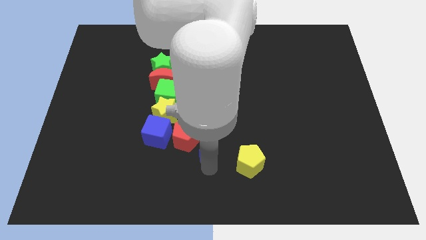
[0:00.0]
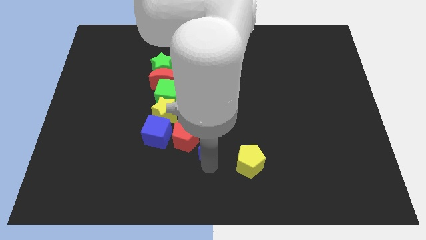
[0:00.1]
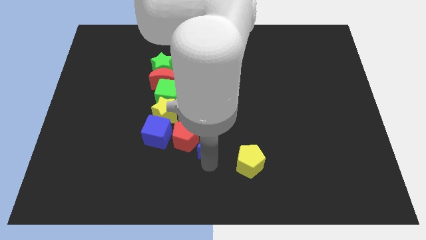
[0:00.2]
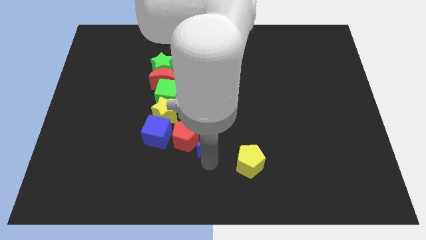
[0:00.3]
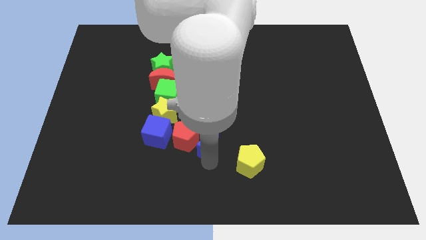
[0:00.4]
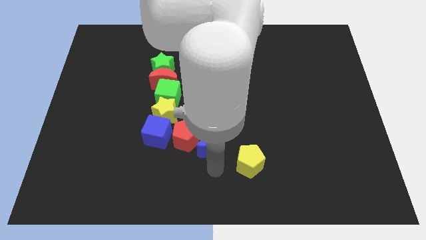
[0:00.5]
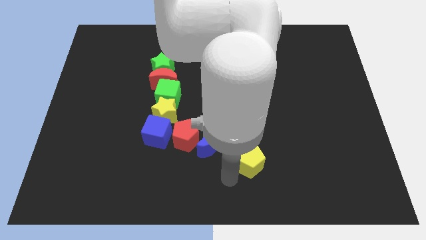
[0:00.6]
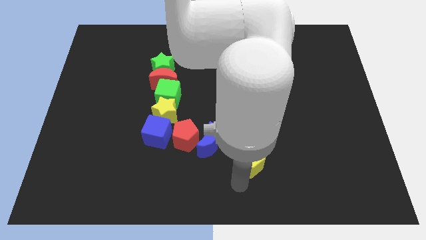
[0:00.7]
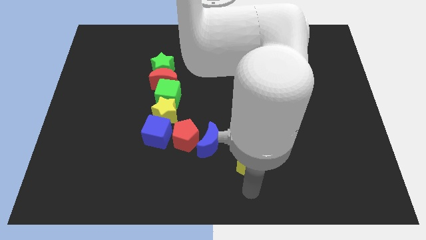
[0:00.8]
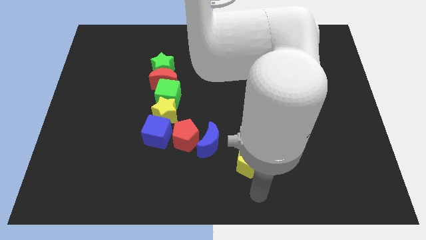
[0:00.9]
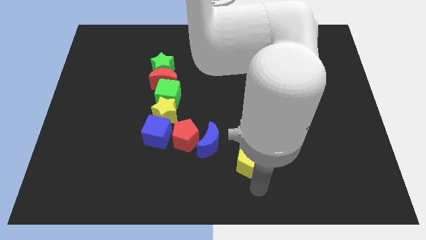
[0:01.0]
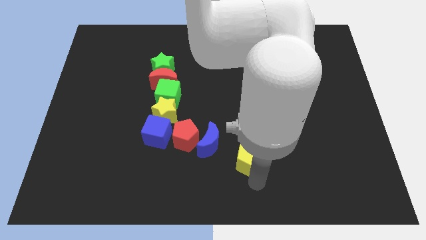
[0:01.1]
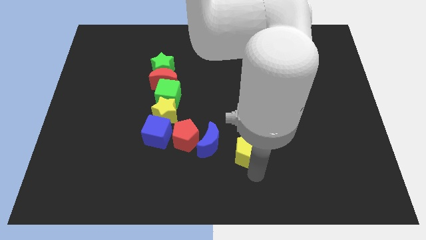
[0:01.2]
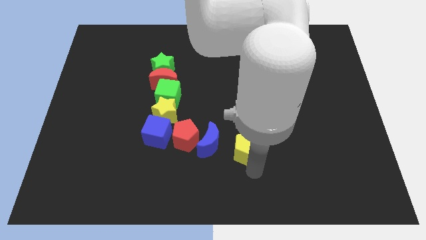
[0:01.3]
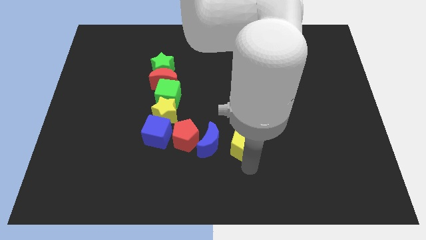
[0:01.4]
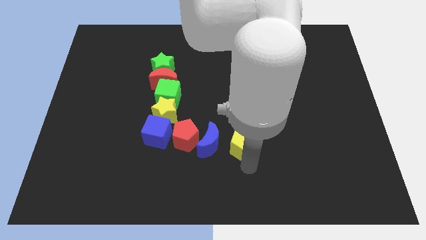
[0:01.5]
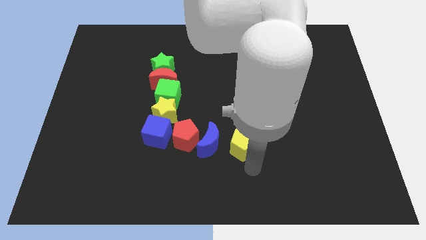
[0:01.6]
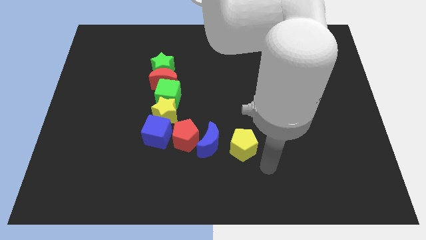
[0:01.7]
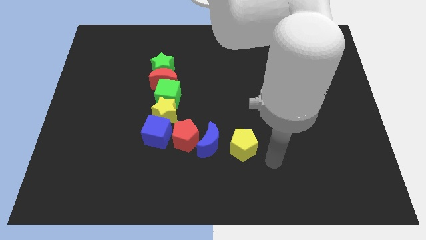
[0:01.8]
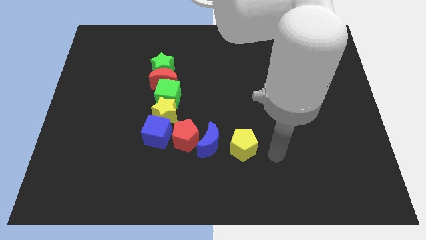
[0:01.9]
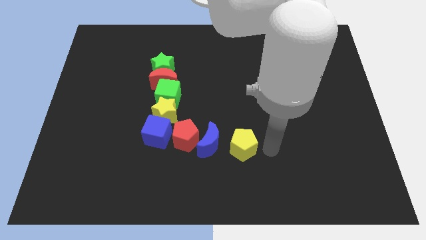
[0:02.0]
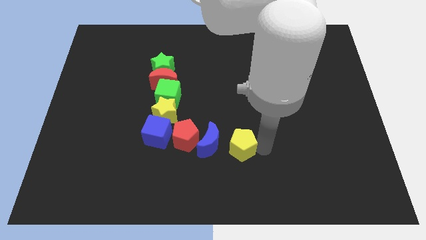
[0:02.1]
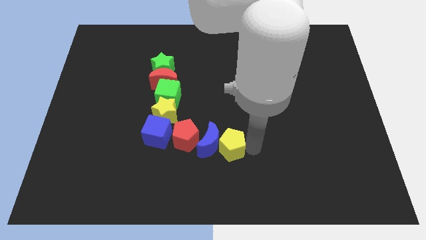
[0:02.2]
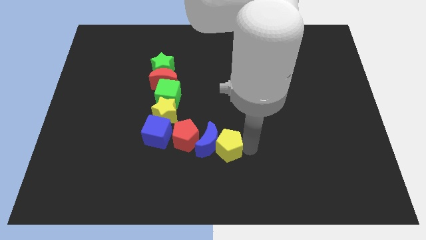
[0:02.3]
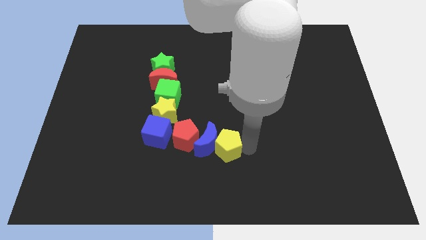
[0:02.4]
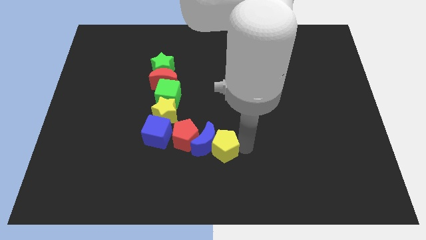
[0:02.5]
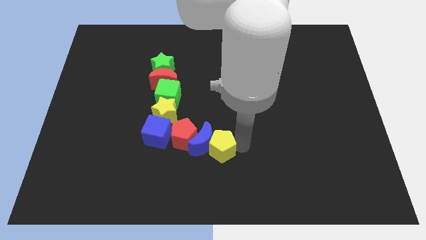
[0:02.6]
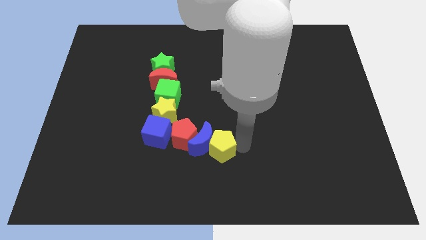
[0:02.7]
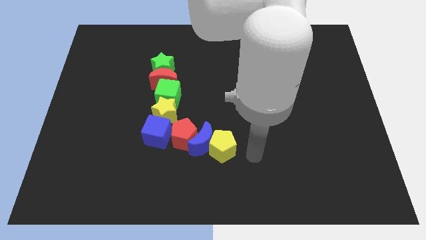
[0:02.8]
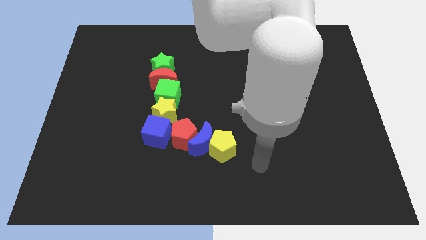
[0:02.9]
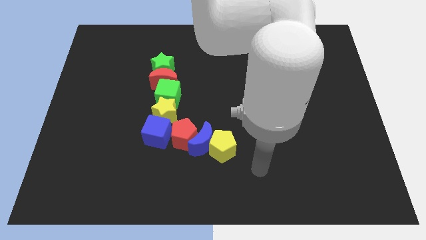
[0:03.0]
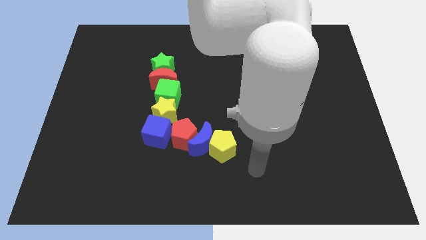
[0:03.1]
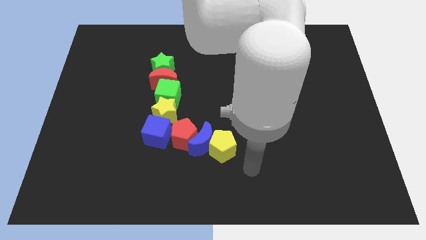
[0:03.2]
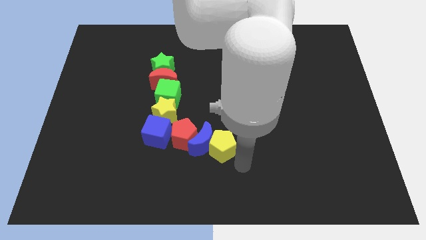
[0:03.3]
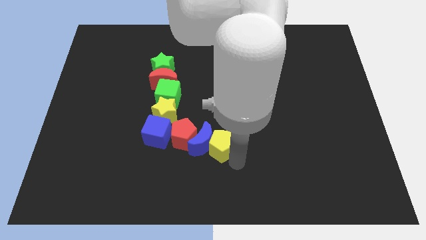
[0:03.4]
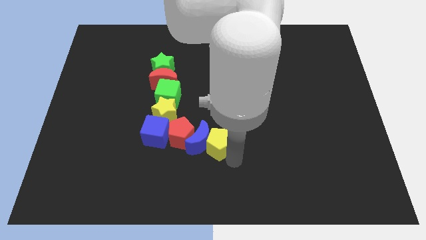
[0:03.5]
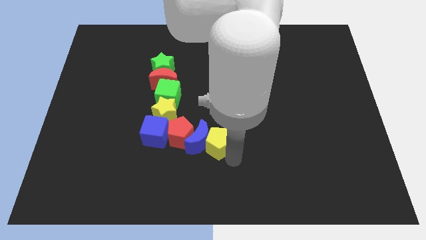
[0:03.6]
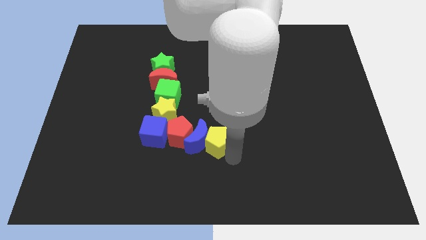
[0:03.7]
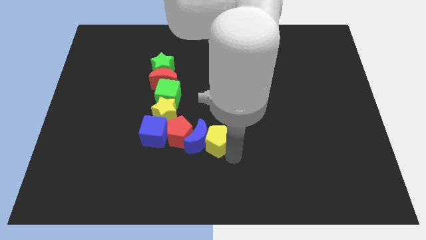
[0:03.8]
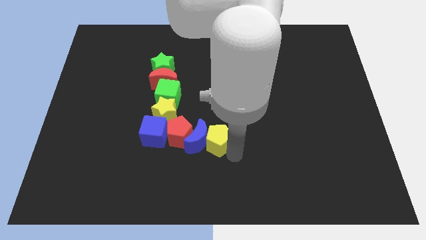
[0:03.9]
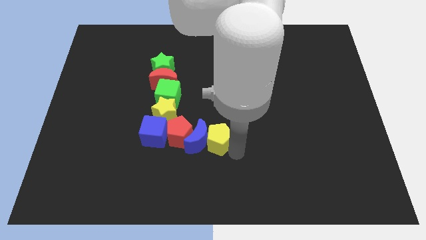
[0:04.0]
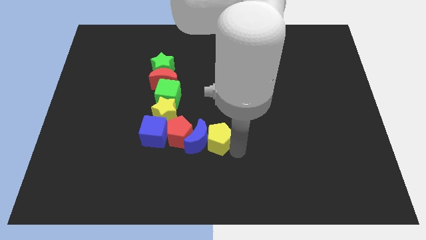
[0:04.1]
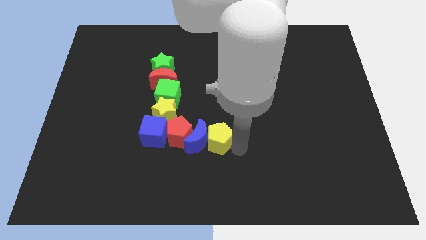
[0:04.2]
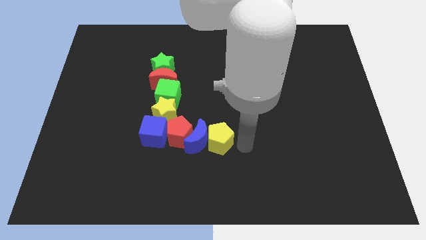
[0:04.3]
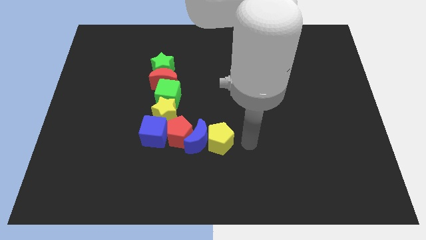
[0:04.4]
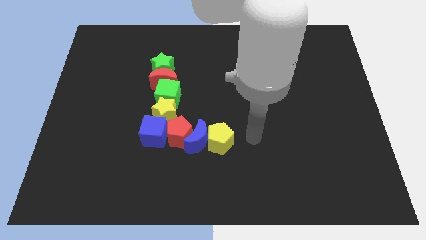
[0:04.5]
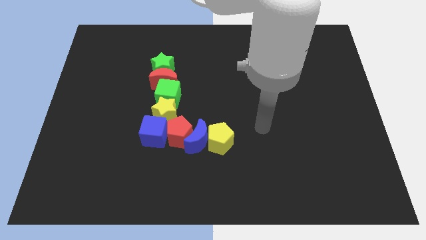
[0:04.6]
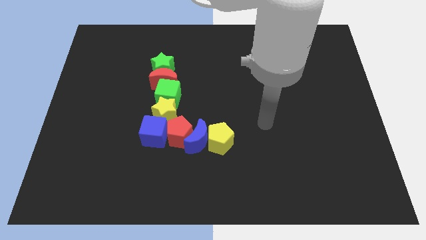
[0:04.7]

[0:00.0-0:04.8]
move the yellow pentagon close to the blue crescent

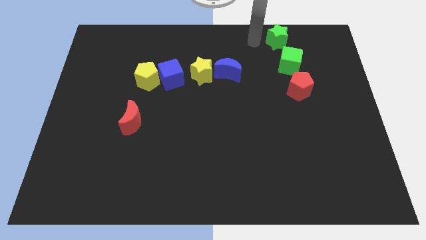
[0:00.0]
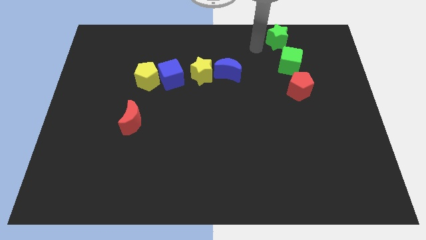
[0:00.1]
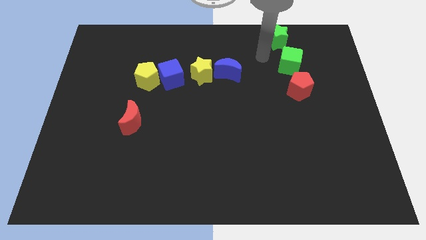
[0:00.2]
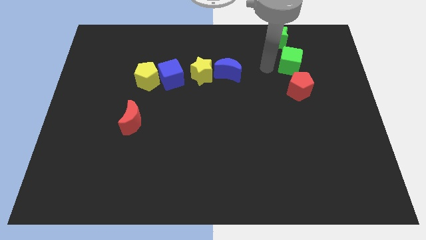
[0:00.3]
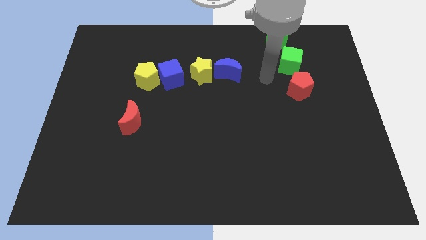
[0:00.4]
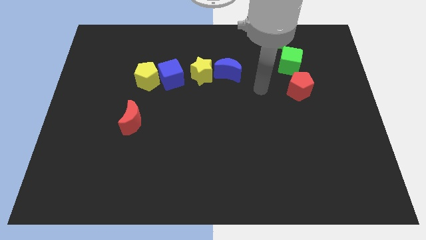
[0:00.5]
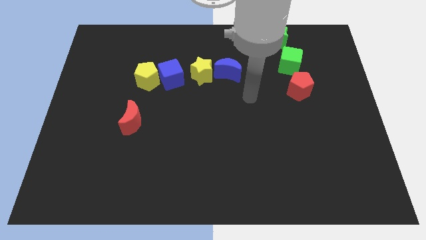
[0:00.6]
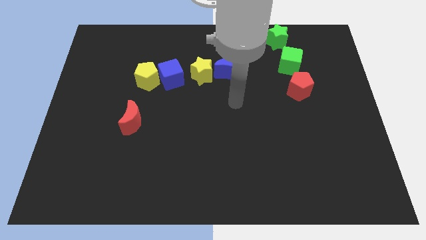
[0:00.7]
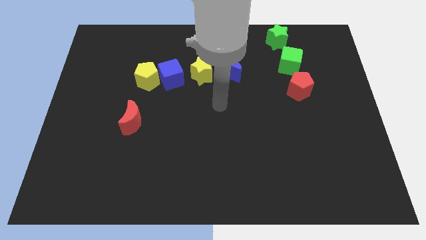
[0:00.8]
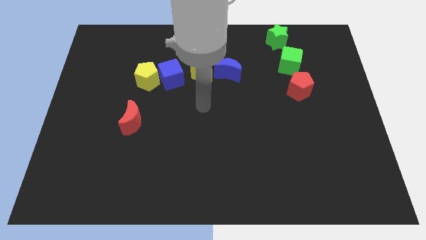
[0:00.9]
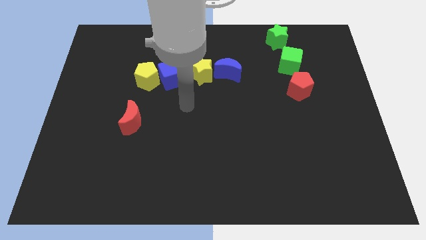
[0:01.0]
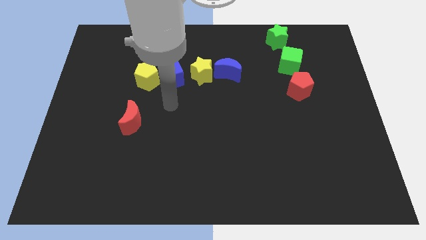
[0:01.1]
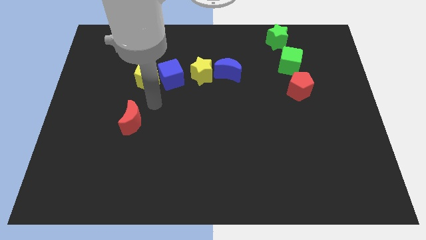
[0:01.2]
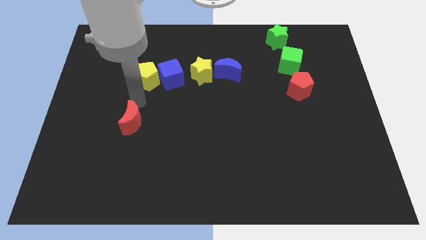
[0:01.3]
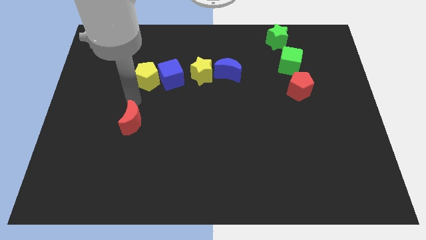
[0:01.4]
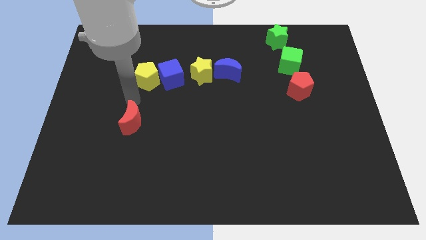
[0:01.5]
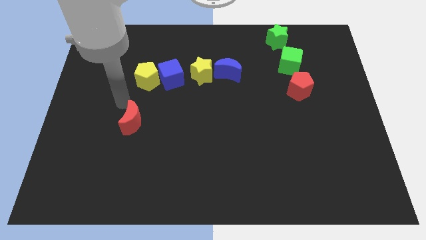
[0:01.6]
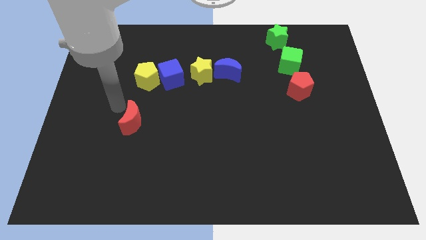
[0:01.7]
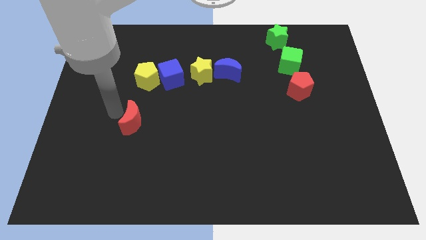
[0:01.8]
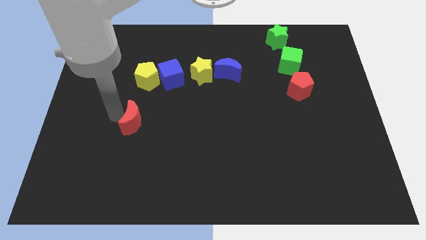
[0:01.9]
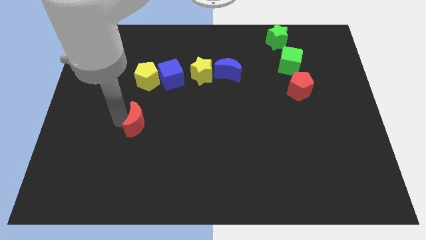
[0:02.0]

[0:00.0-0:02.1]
move your arm near red moon

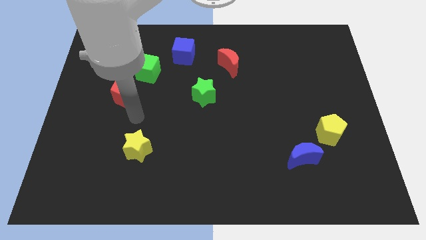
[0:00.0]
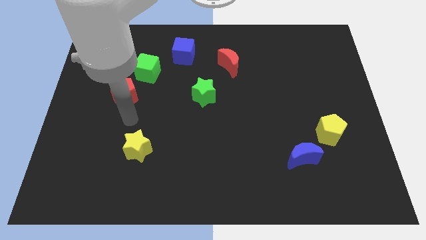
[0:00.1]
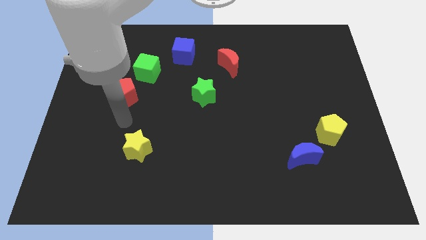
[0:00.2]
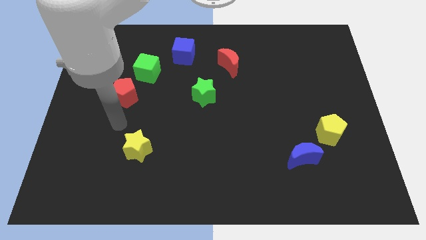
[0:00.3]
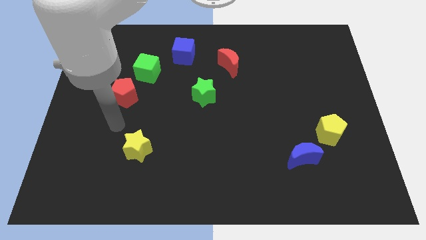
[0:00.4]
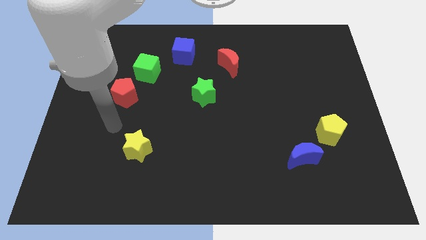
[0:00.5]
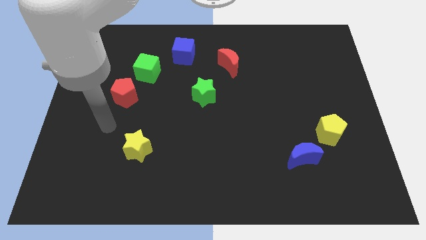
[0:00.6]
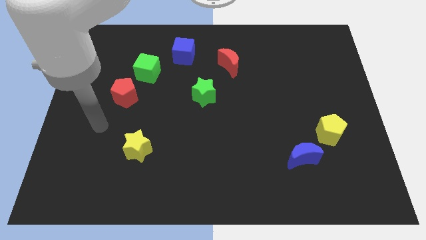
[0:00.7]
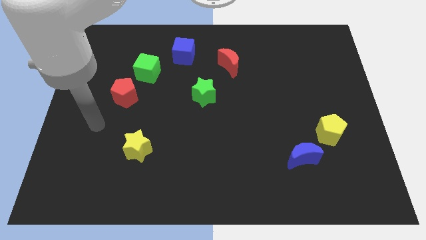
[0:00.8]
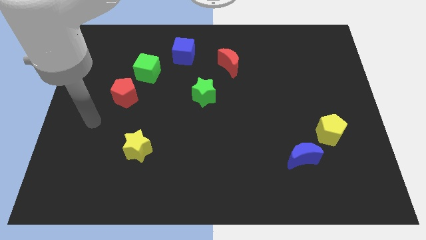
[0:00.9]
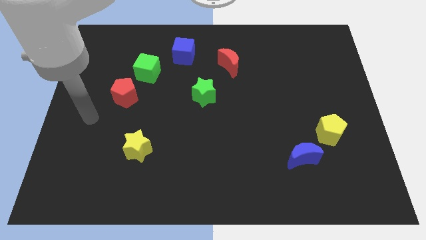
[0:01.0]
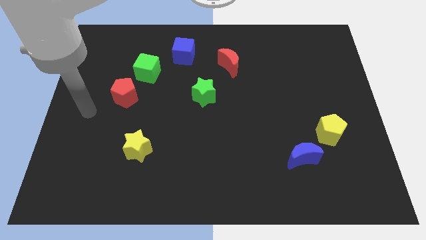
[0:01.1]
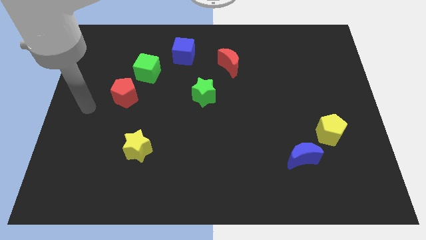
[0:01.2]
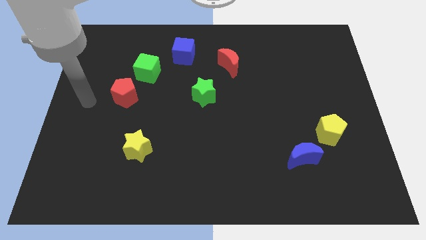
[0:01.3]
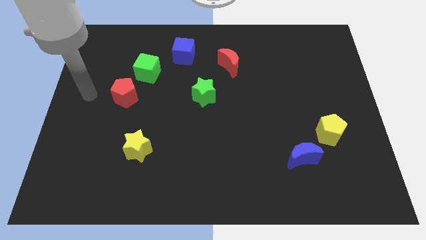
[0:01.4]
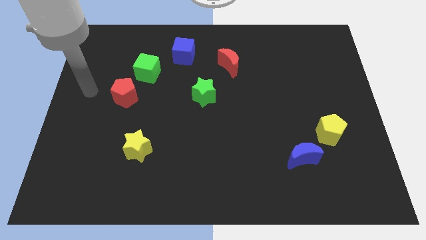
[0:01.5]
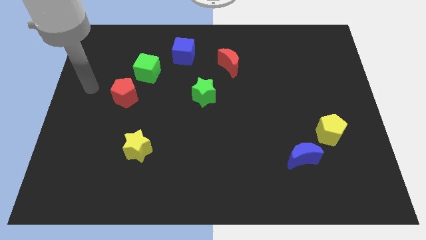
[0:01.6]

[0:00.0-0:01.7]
move the arm to the left of the red pentagon

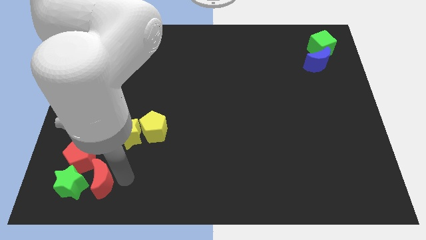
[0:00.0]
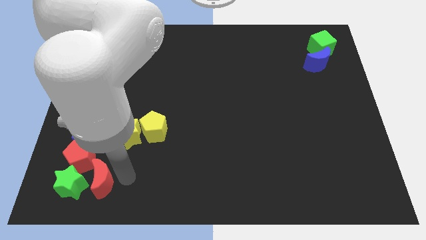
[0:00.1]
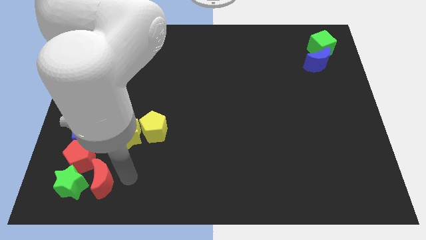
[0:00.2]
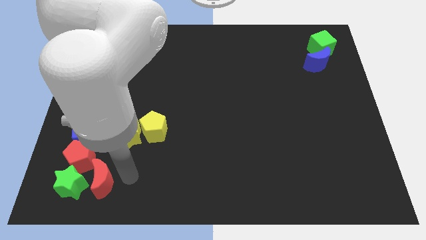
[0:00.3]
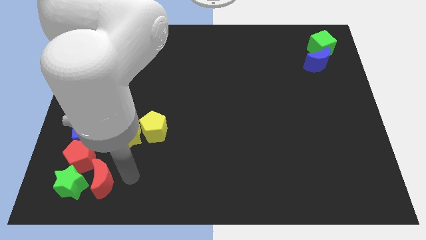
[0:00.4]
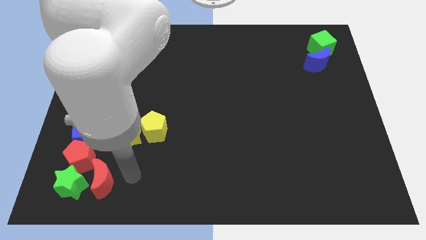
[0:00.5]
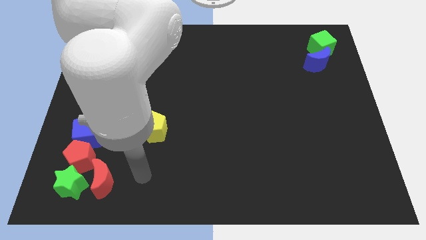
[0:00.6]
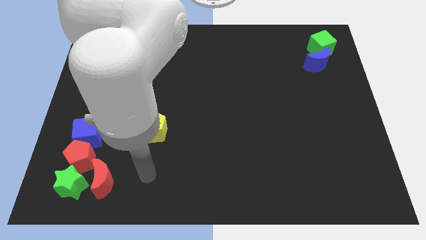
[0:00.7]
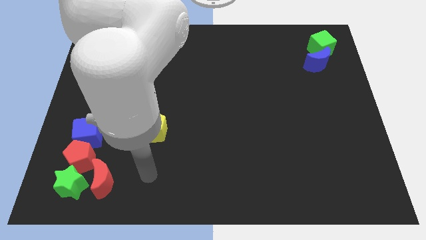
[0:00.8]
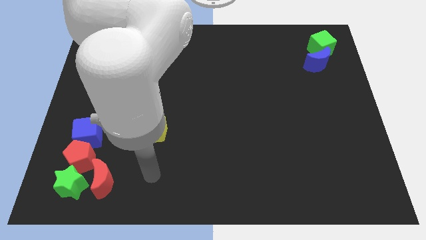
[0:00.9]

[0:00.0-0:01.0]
move the arm away from the red crescent
